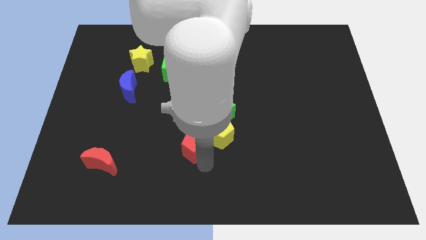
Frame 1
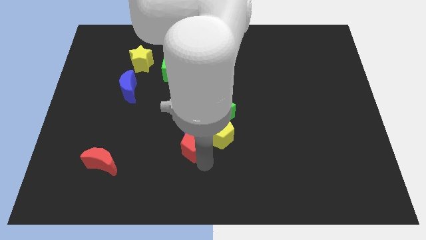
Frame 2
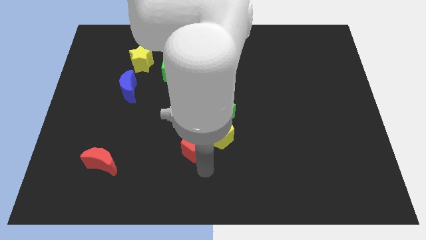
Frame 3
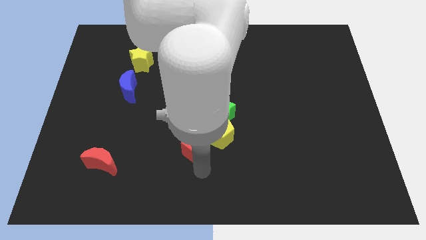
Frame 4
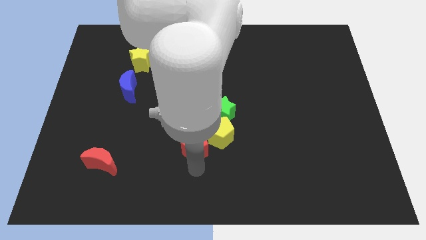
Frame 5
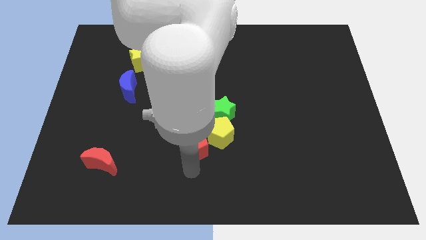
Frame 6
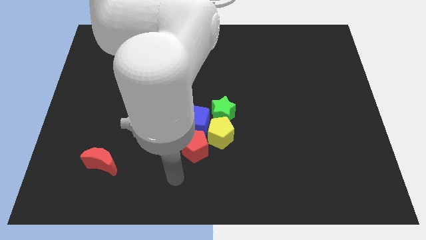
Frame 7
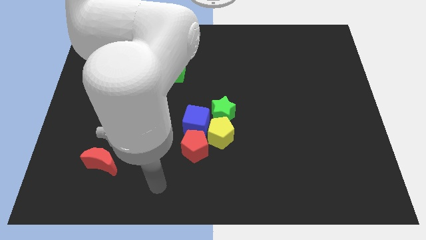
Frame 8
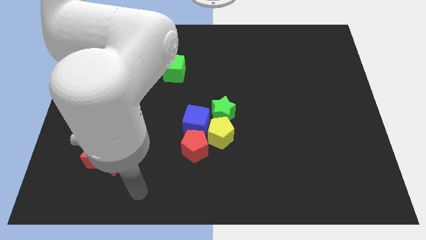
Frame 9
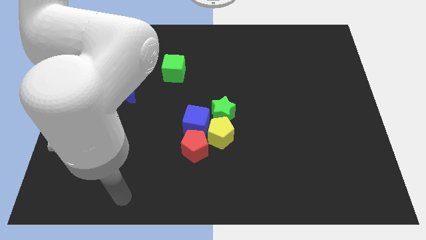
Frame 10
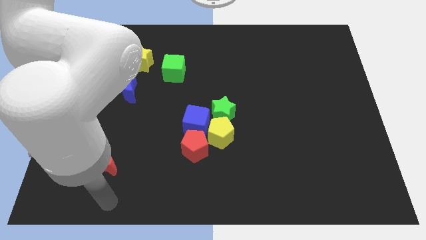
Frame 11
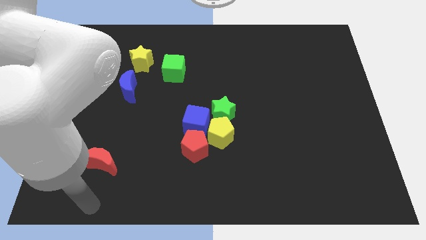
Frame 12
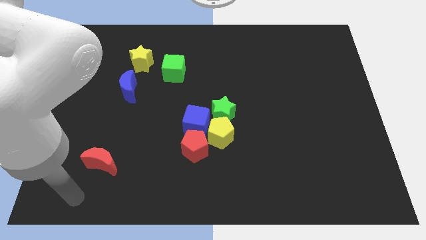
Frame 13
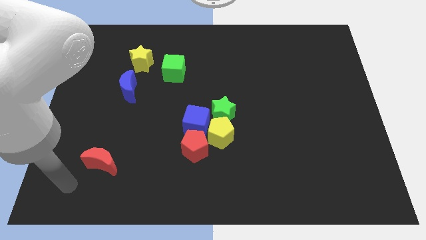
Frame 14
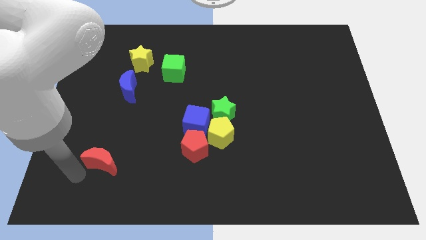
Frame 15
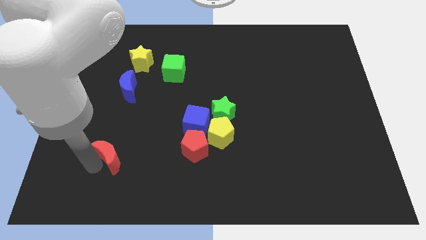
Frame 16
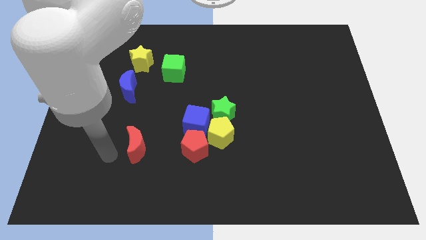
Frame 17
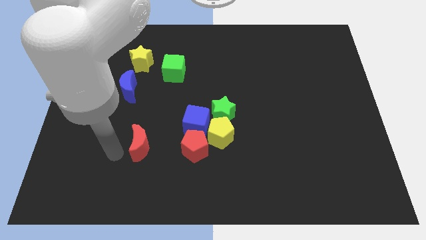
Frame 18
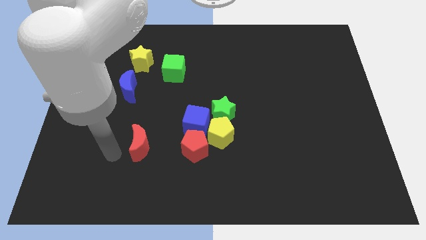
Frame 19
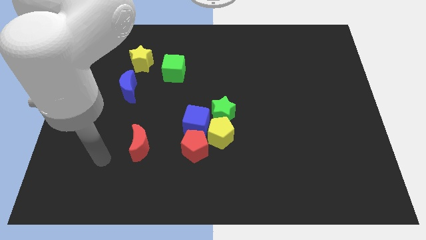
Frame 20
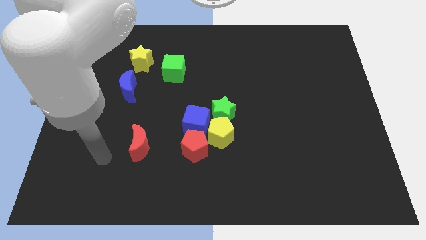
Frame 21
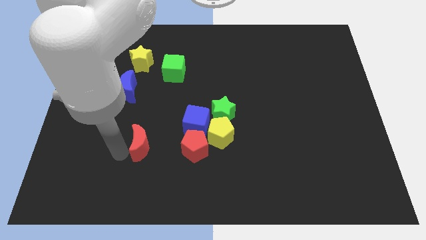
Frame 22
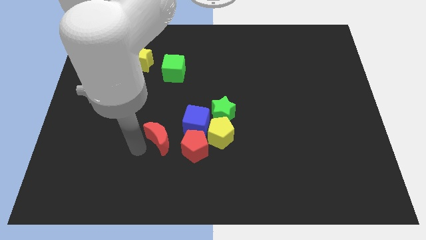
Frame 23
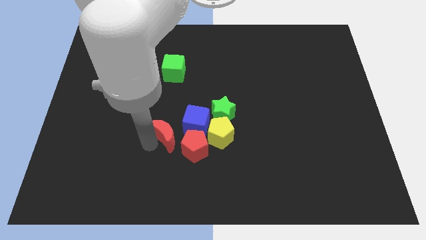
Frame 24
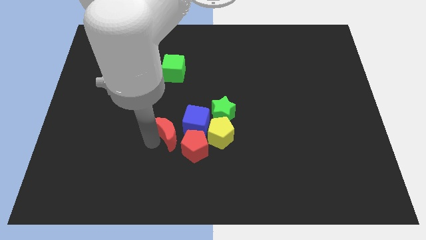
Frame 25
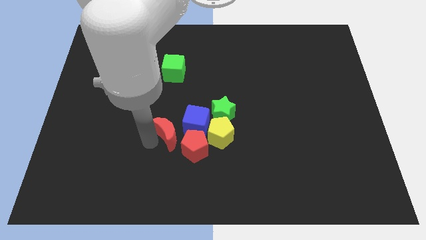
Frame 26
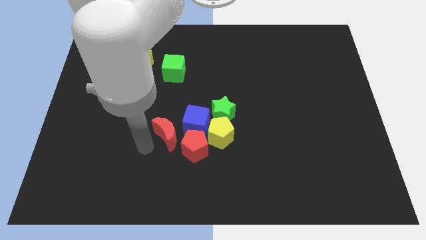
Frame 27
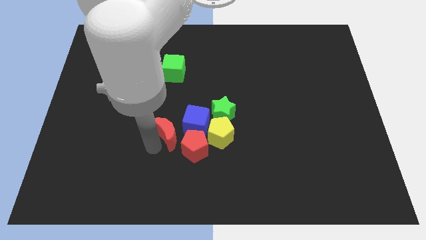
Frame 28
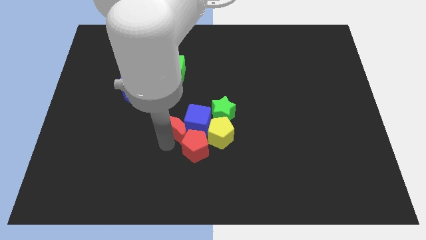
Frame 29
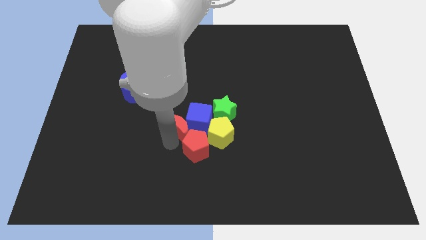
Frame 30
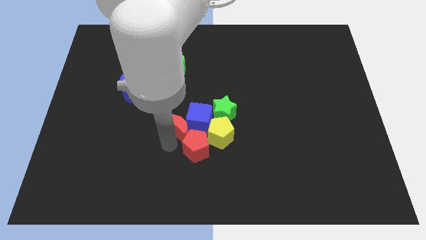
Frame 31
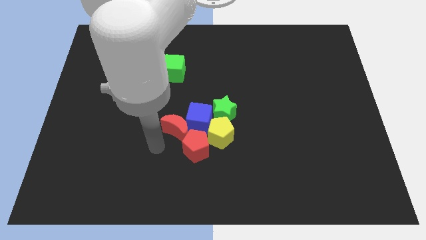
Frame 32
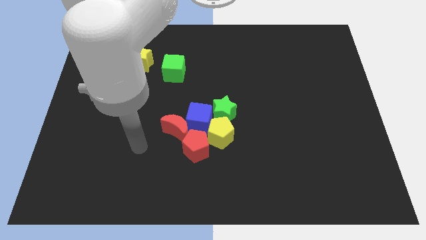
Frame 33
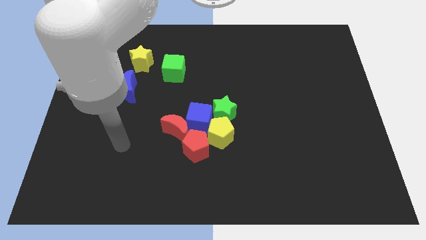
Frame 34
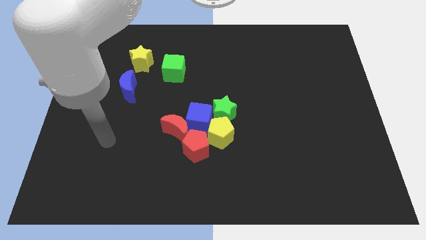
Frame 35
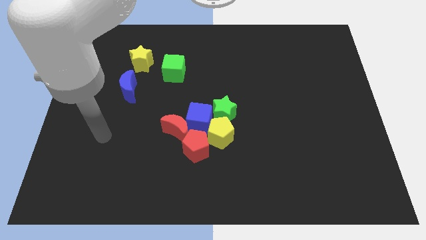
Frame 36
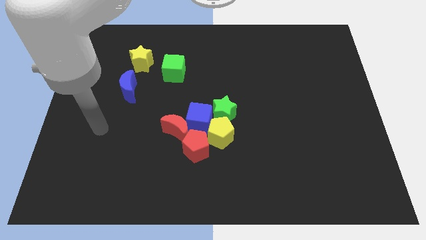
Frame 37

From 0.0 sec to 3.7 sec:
push the red crescent into the blue cube

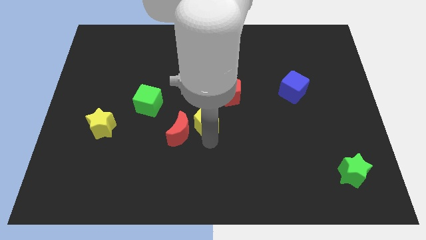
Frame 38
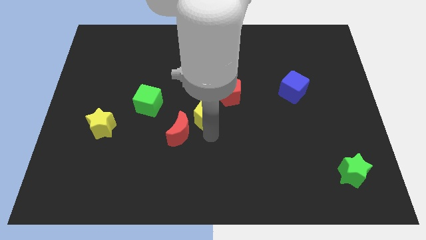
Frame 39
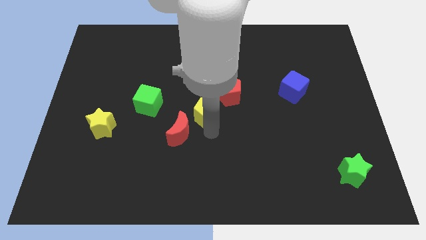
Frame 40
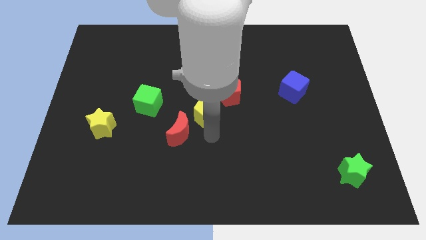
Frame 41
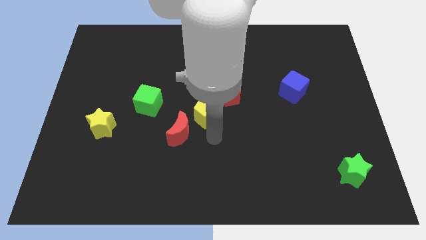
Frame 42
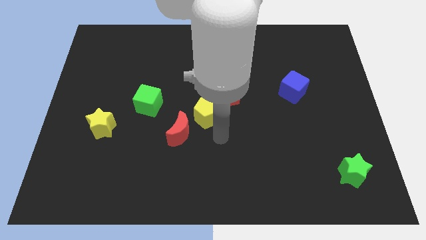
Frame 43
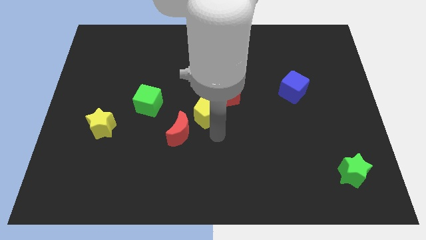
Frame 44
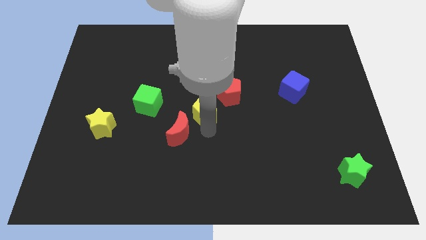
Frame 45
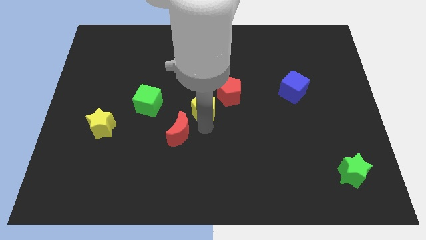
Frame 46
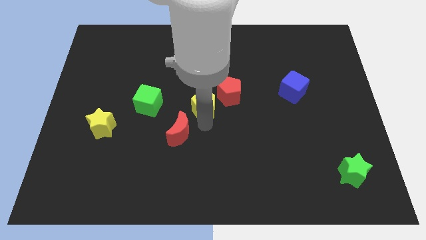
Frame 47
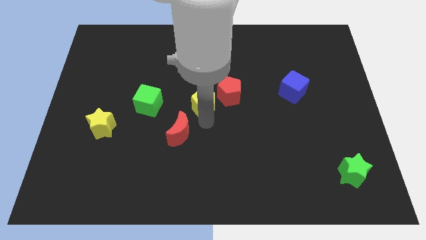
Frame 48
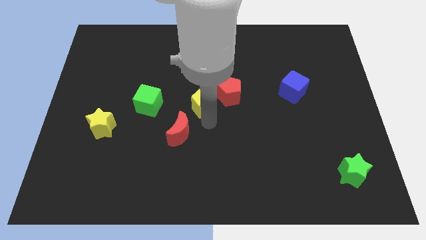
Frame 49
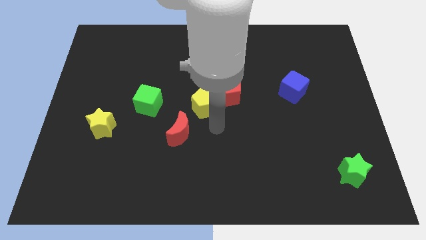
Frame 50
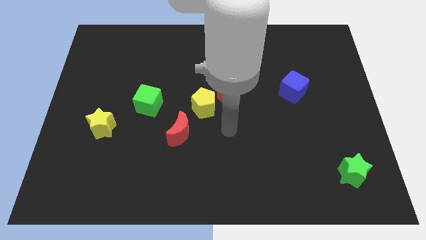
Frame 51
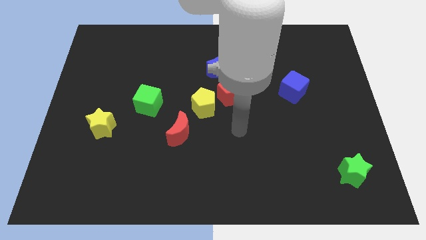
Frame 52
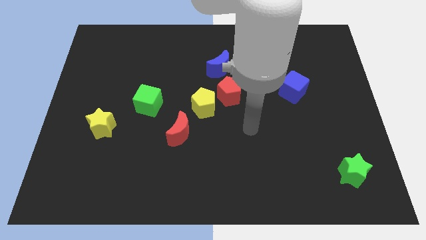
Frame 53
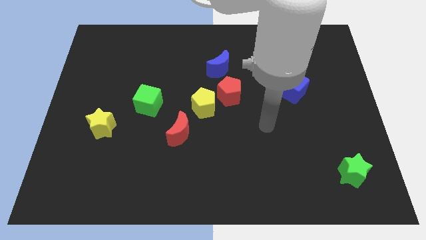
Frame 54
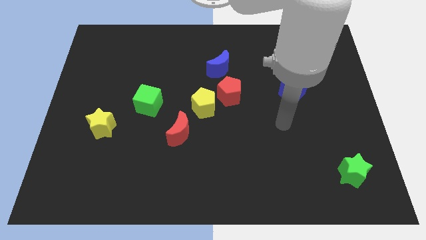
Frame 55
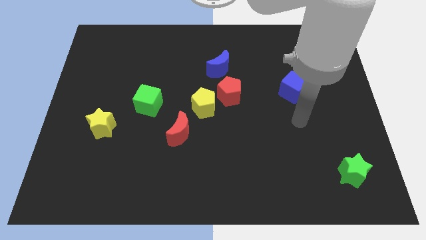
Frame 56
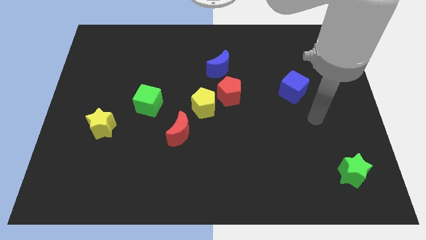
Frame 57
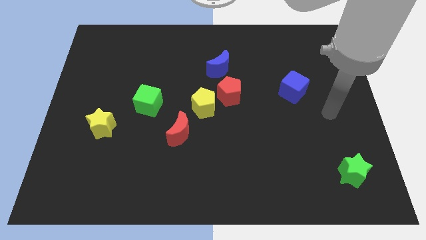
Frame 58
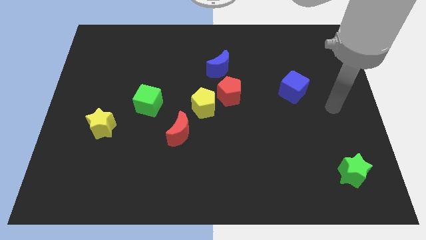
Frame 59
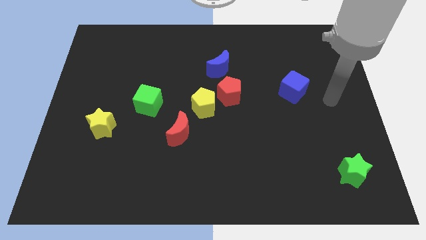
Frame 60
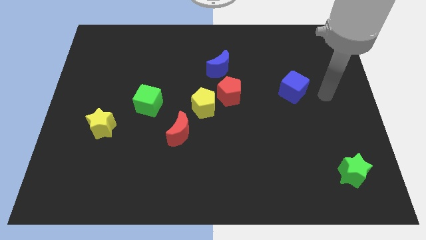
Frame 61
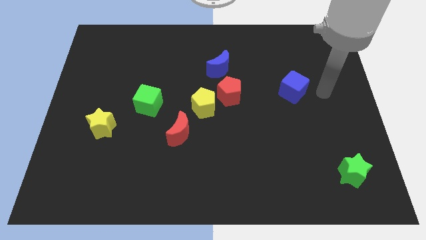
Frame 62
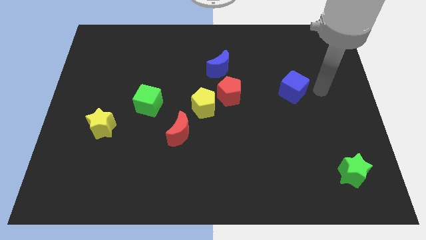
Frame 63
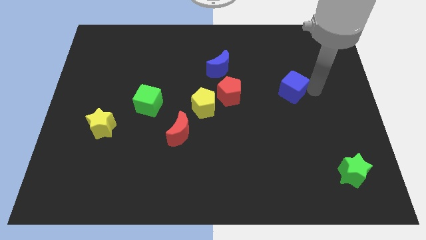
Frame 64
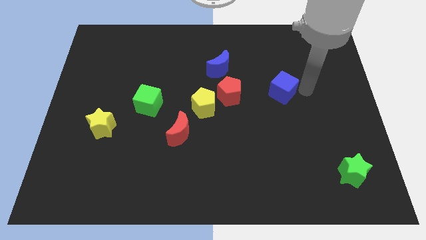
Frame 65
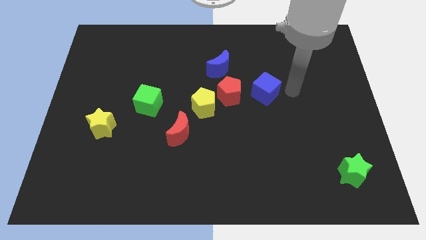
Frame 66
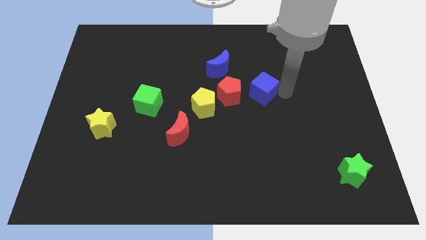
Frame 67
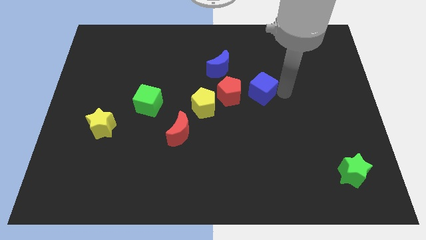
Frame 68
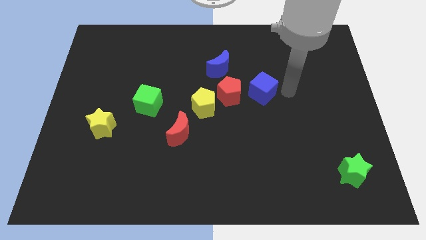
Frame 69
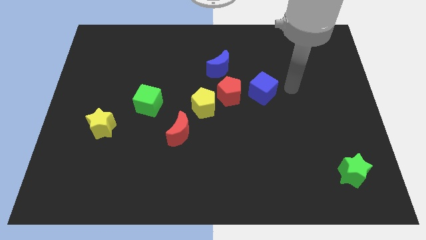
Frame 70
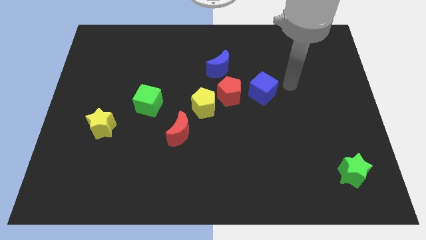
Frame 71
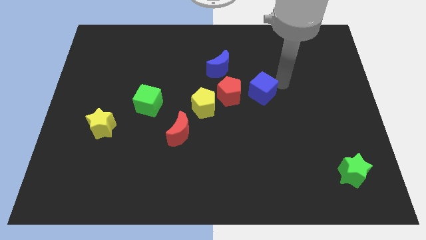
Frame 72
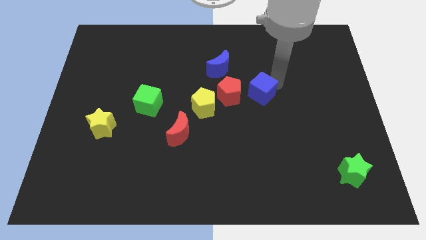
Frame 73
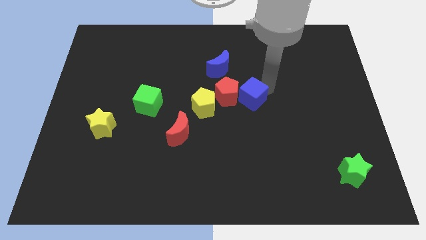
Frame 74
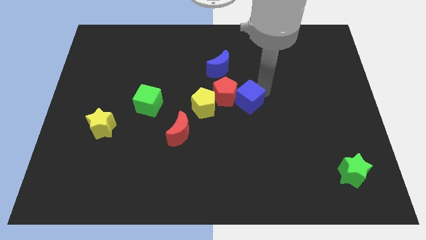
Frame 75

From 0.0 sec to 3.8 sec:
push the blue block into the red pentagon

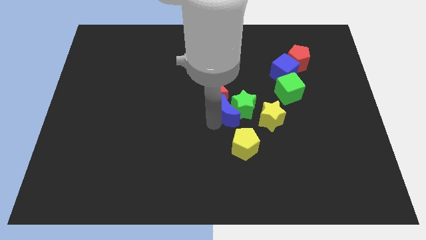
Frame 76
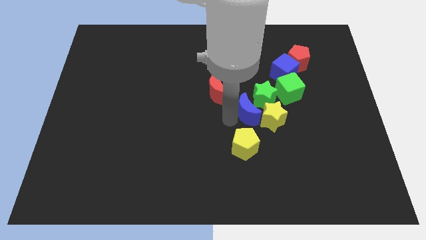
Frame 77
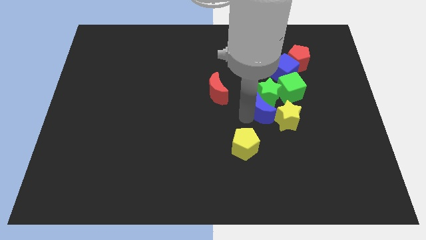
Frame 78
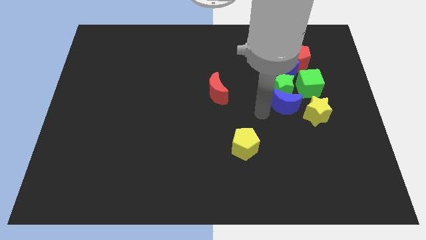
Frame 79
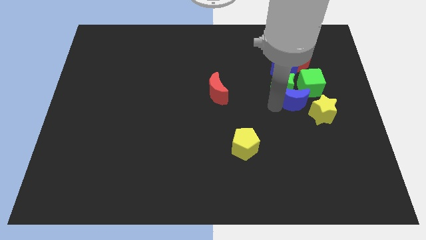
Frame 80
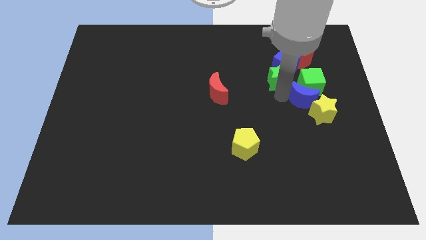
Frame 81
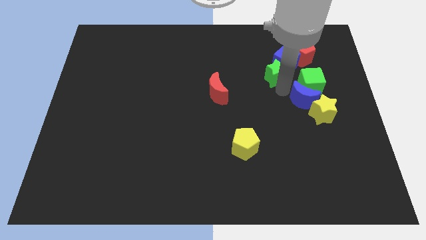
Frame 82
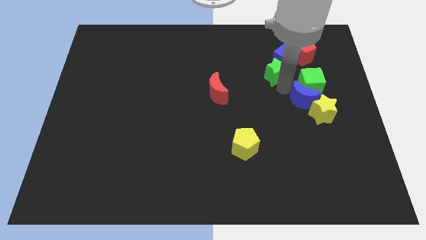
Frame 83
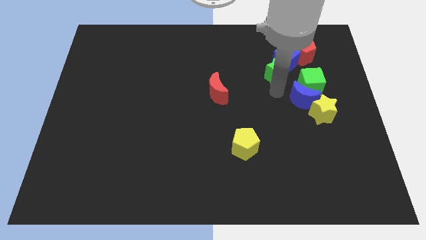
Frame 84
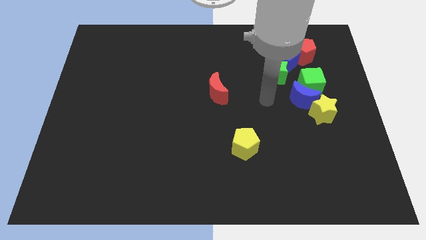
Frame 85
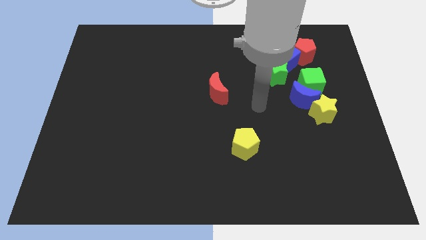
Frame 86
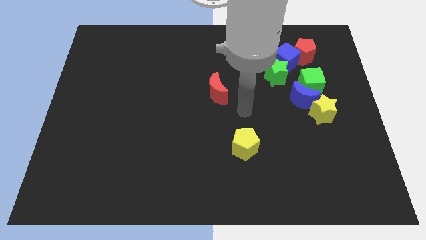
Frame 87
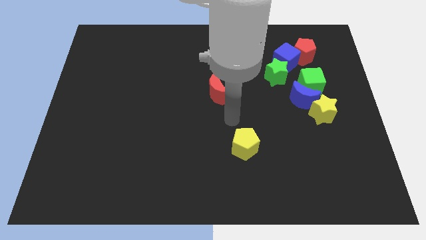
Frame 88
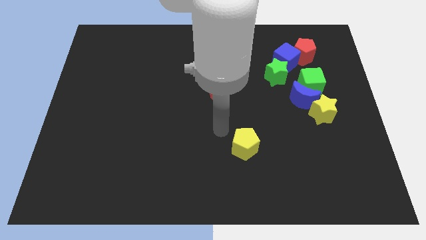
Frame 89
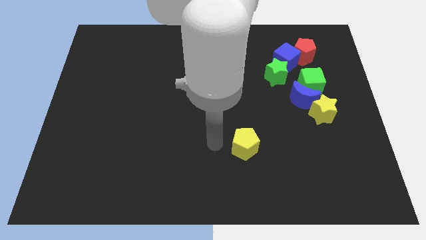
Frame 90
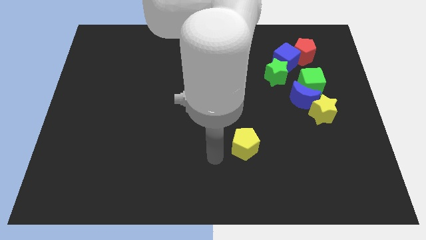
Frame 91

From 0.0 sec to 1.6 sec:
put the blue moon into the green cube

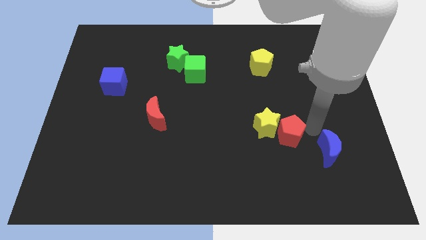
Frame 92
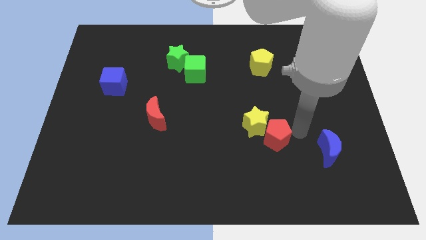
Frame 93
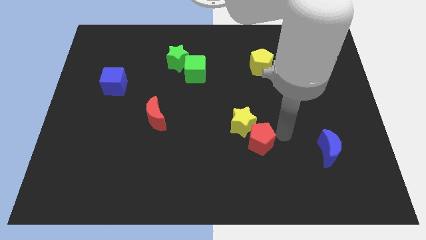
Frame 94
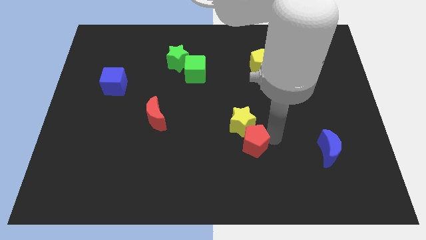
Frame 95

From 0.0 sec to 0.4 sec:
push the red pentagon into the yellow star
